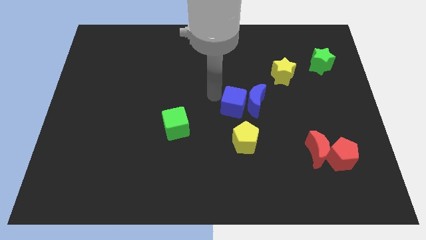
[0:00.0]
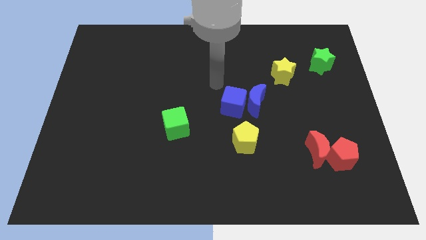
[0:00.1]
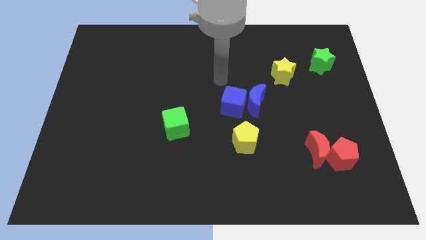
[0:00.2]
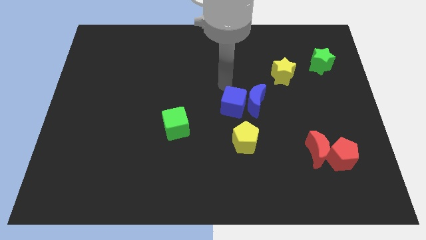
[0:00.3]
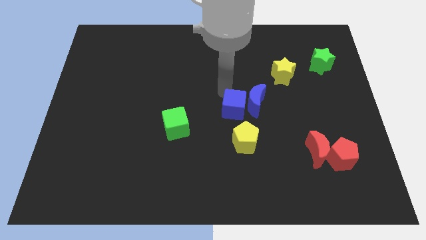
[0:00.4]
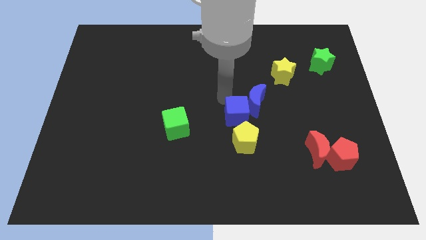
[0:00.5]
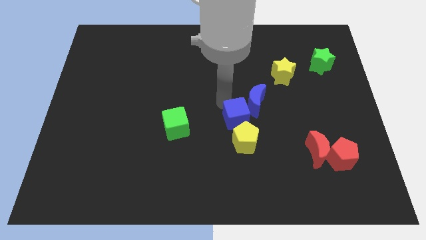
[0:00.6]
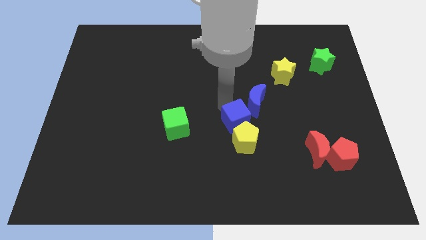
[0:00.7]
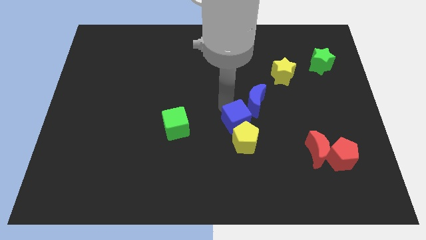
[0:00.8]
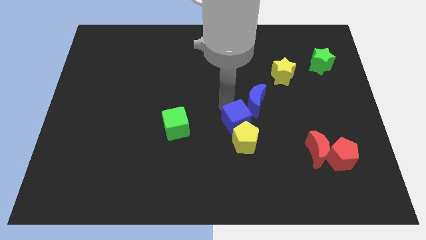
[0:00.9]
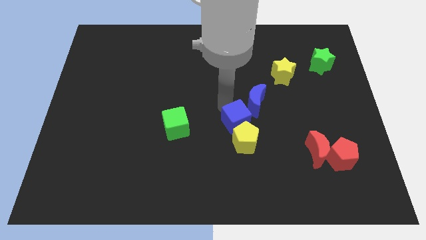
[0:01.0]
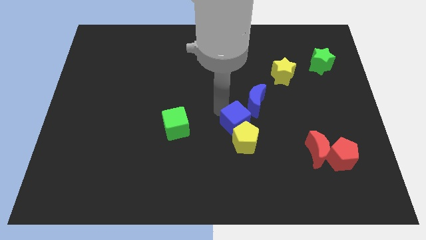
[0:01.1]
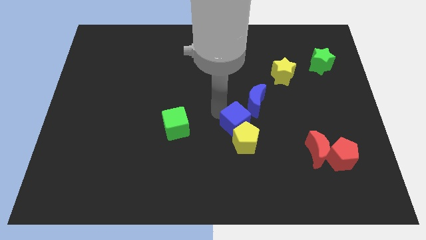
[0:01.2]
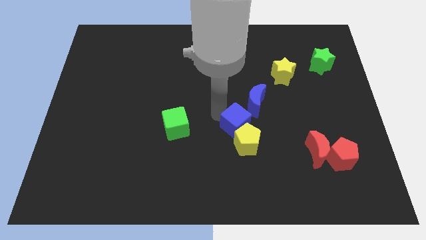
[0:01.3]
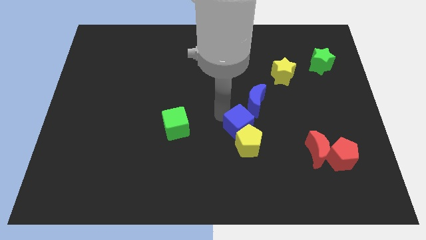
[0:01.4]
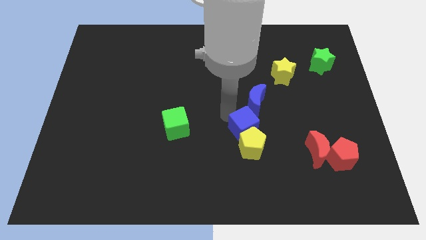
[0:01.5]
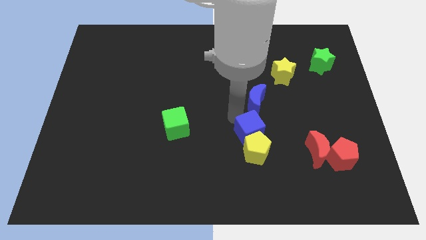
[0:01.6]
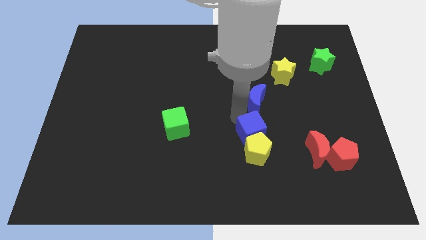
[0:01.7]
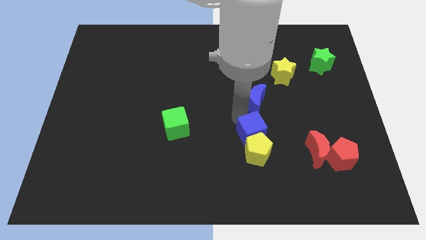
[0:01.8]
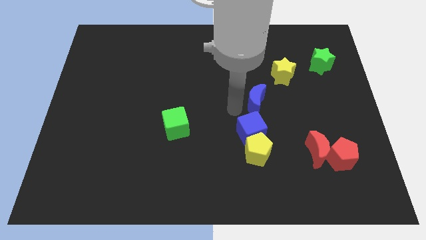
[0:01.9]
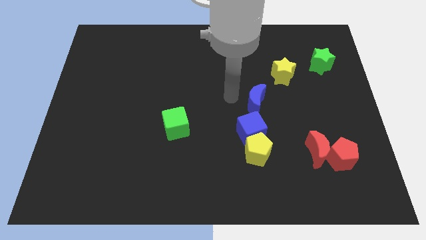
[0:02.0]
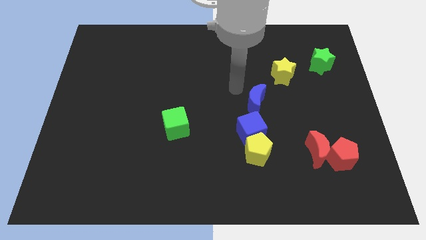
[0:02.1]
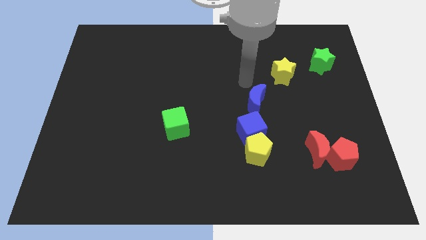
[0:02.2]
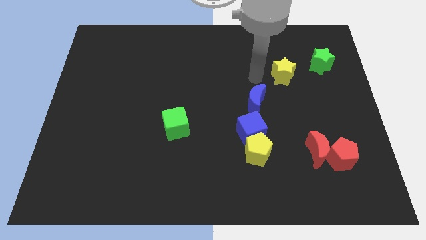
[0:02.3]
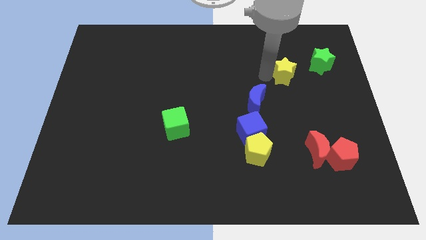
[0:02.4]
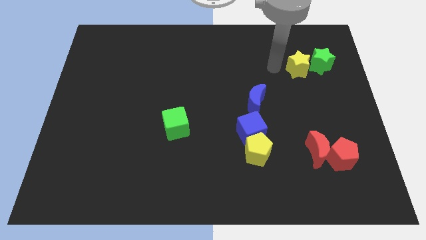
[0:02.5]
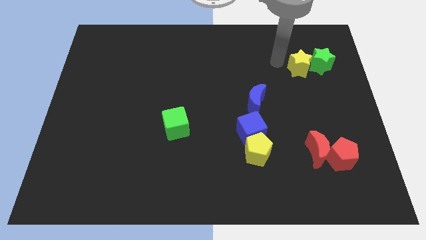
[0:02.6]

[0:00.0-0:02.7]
place the blue cube in between the blue crescent and yellow pentagon to form a vertical line

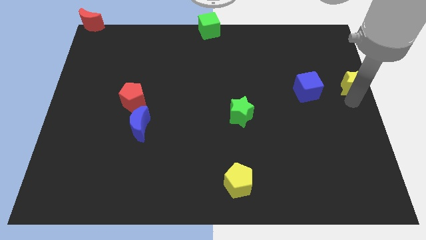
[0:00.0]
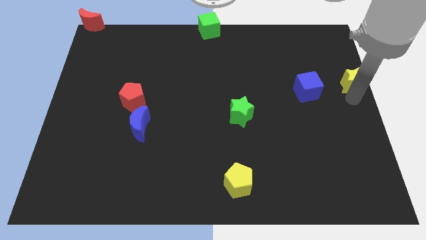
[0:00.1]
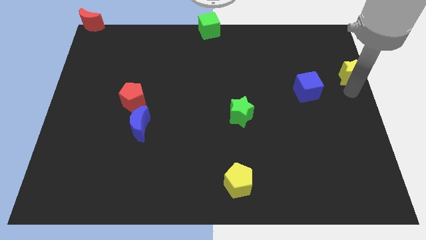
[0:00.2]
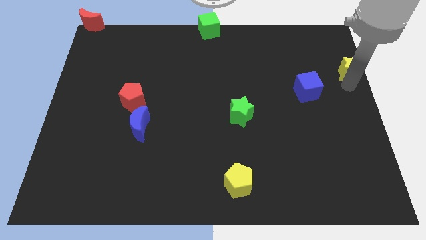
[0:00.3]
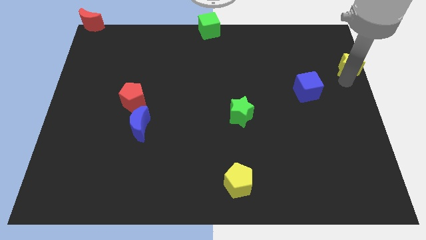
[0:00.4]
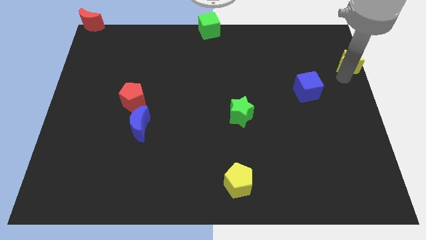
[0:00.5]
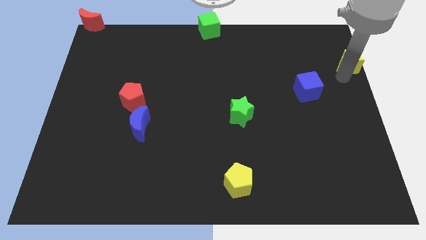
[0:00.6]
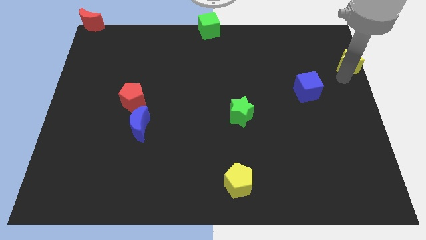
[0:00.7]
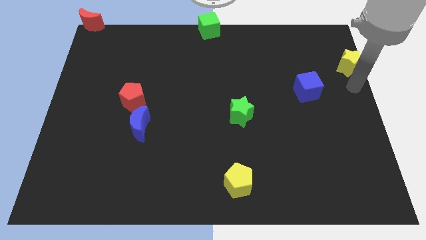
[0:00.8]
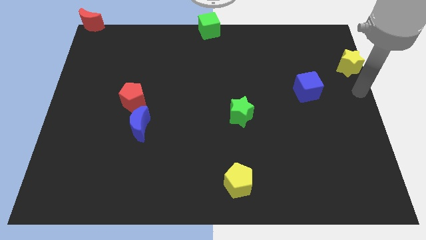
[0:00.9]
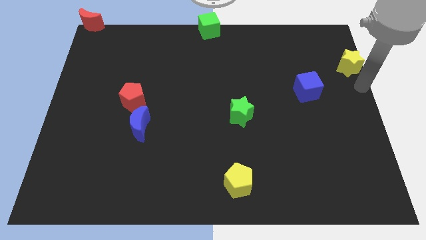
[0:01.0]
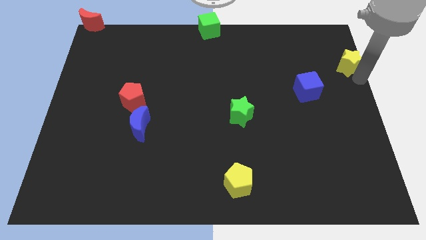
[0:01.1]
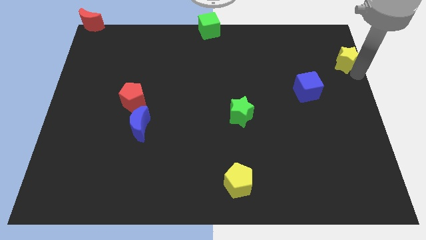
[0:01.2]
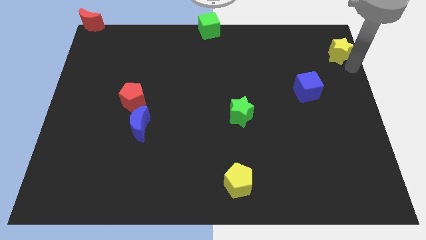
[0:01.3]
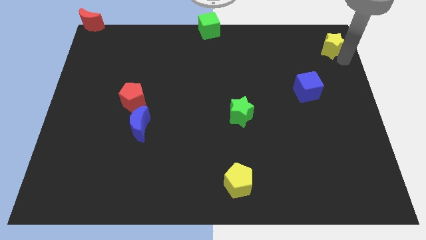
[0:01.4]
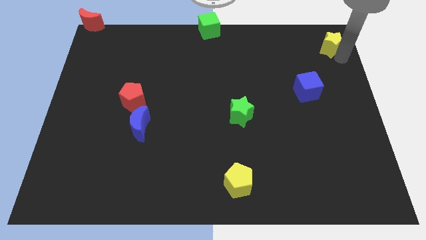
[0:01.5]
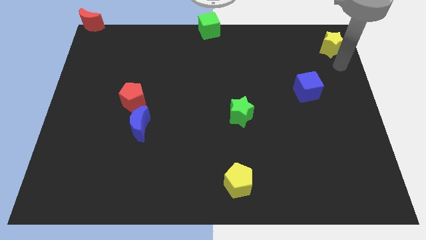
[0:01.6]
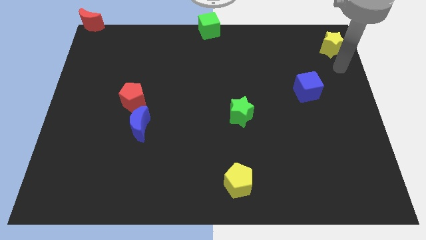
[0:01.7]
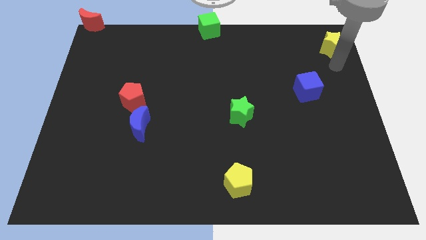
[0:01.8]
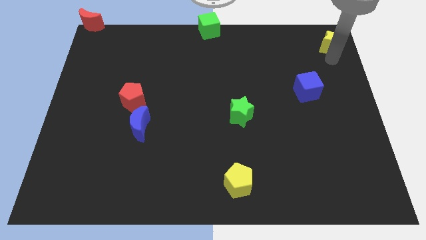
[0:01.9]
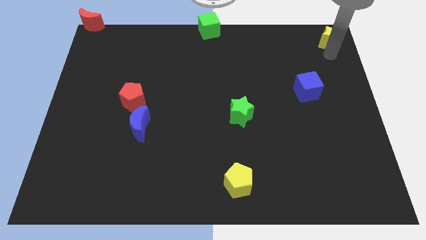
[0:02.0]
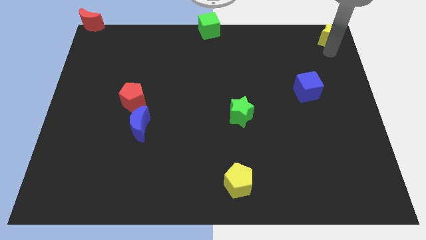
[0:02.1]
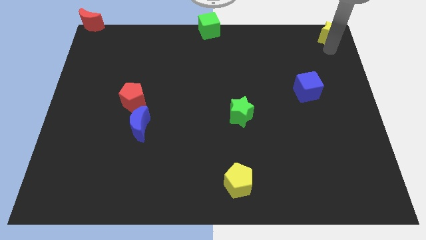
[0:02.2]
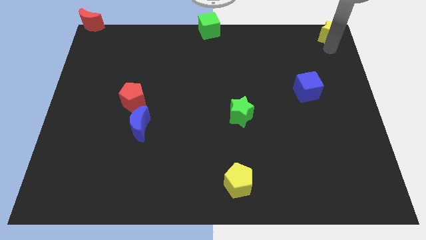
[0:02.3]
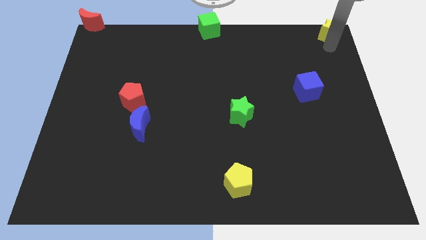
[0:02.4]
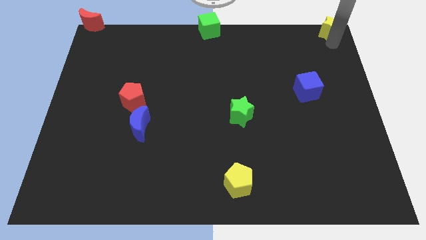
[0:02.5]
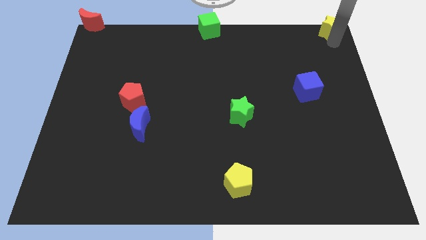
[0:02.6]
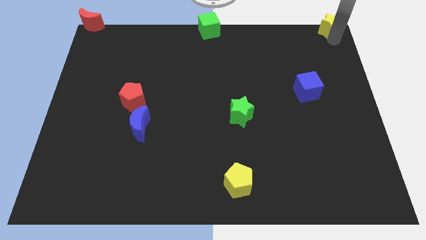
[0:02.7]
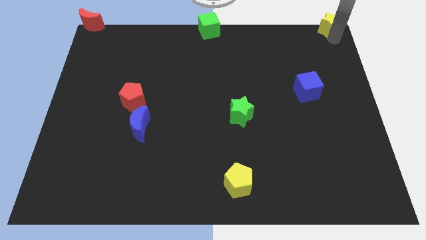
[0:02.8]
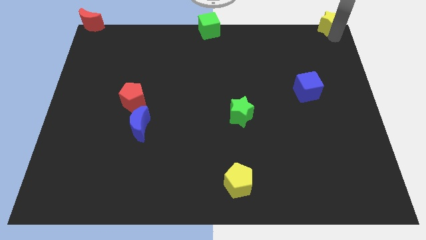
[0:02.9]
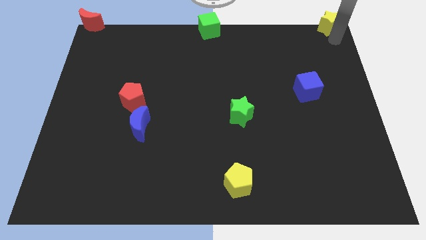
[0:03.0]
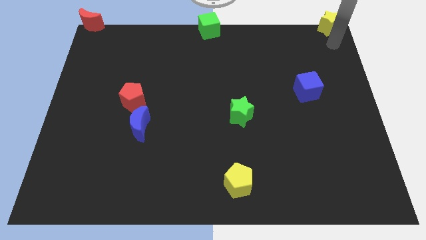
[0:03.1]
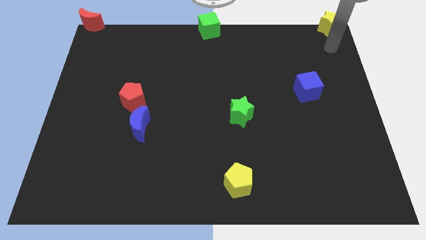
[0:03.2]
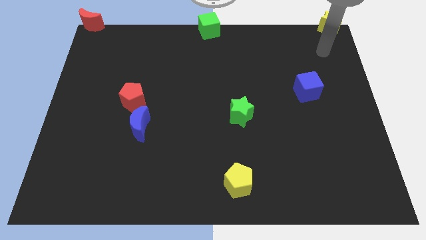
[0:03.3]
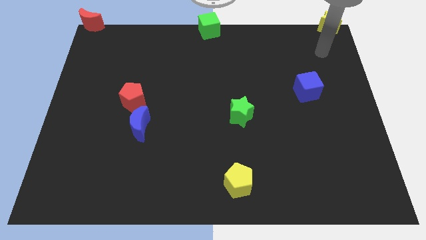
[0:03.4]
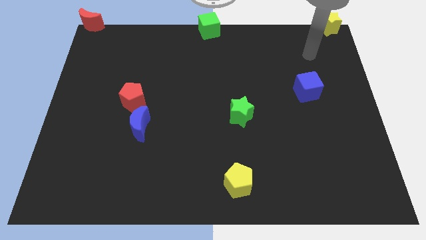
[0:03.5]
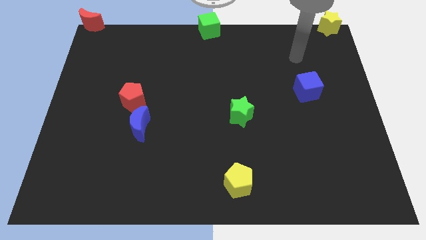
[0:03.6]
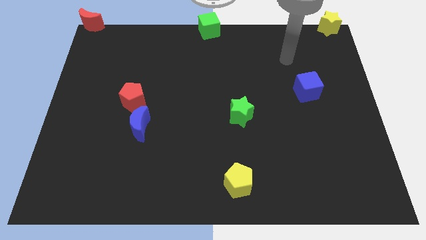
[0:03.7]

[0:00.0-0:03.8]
push the yellow star to the top right to the corner of the board

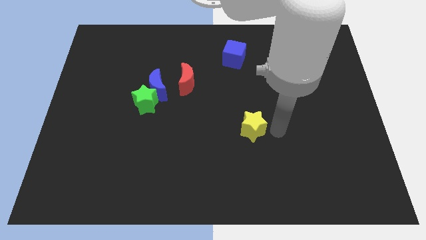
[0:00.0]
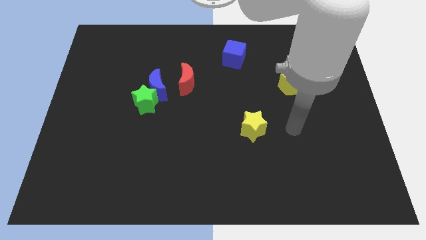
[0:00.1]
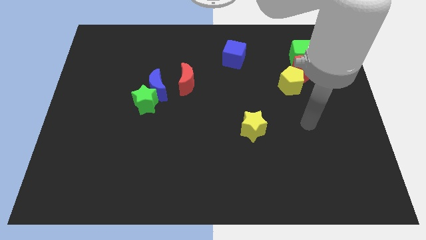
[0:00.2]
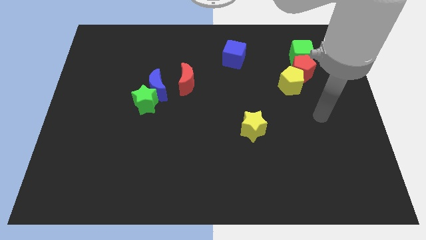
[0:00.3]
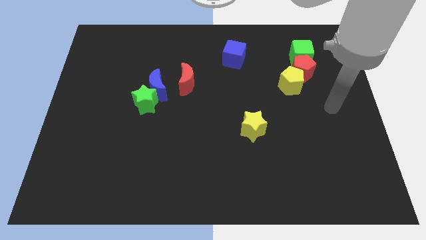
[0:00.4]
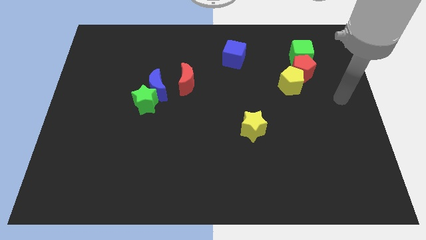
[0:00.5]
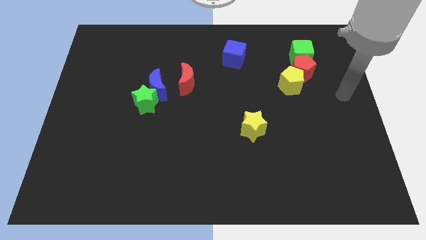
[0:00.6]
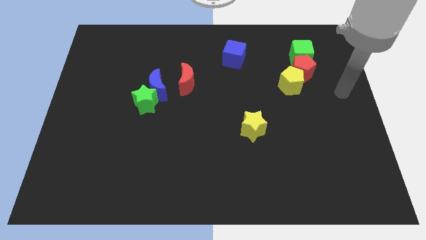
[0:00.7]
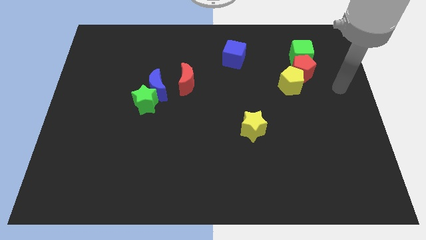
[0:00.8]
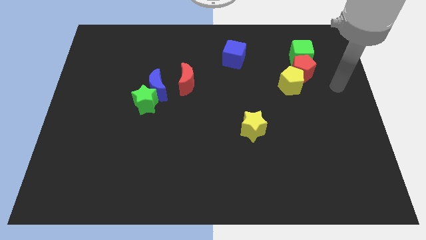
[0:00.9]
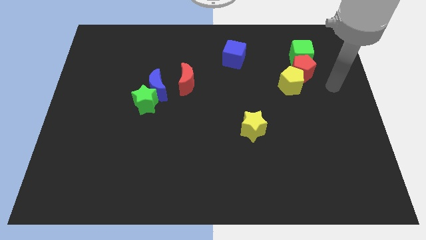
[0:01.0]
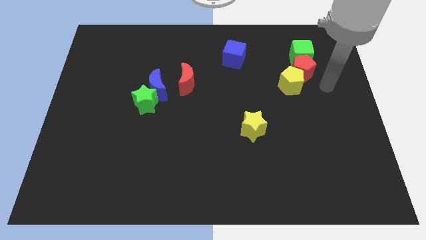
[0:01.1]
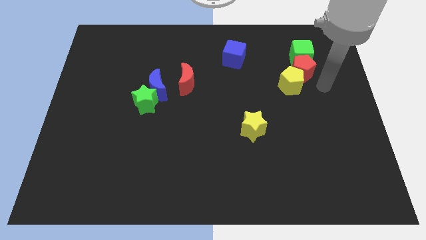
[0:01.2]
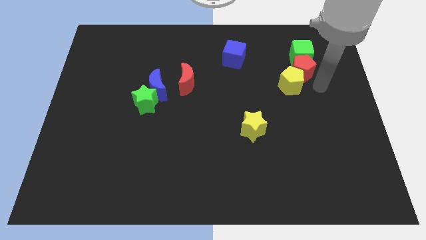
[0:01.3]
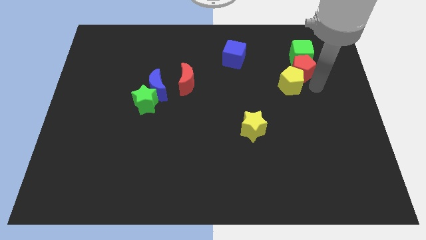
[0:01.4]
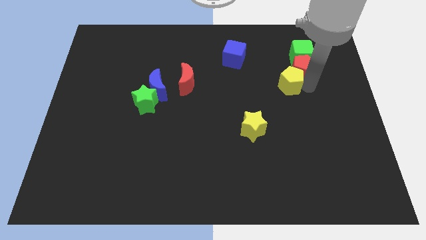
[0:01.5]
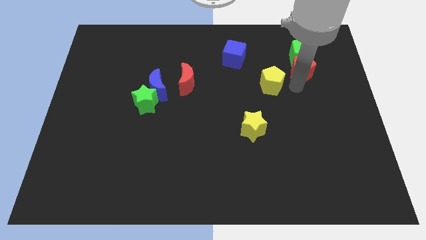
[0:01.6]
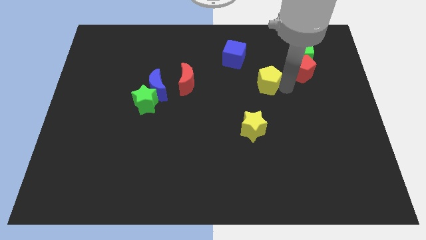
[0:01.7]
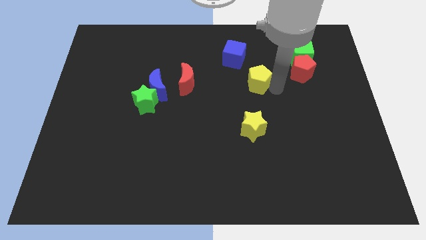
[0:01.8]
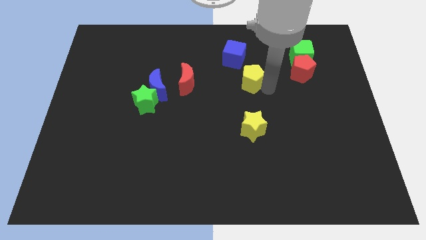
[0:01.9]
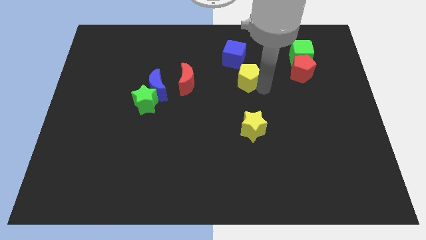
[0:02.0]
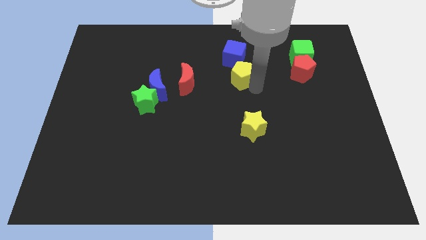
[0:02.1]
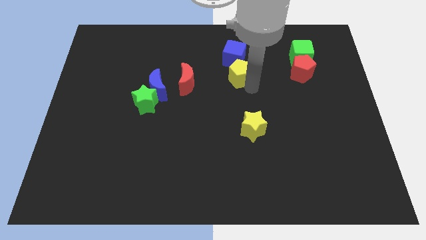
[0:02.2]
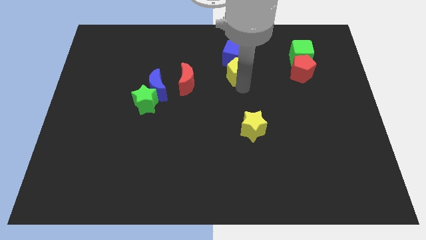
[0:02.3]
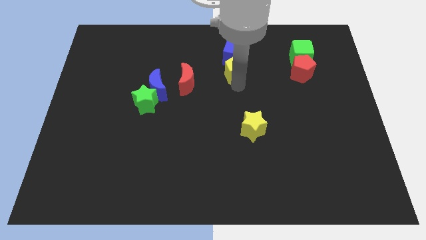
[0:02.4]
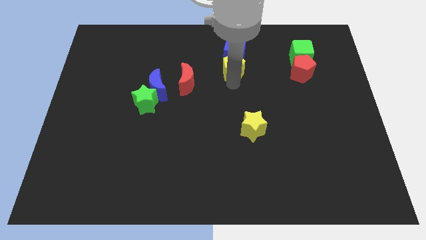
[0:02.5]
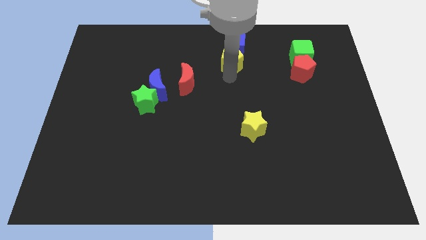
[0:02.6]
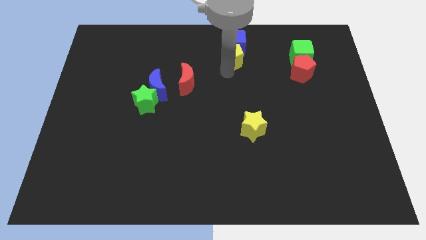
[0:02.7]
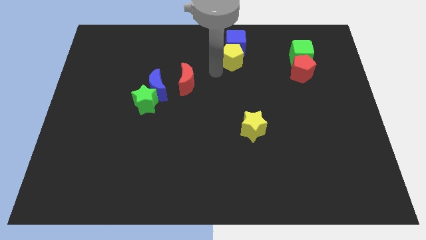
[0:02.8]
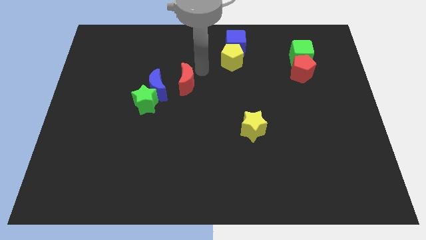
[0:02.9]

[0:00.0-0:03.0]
push the yellow pentagon into the bottom side of the blue cube
